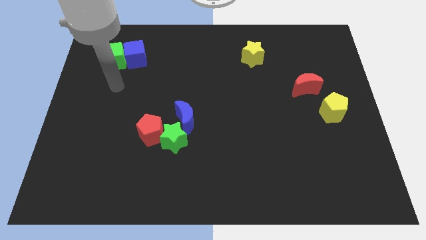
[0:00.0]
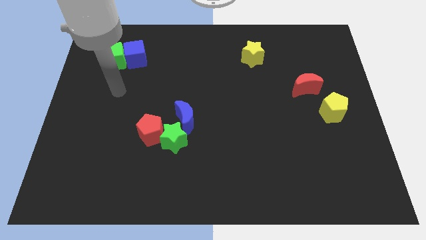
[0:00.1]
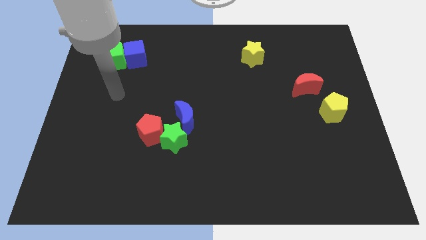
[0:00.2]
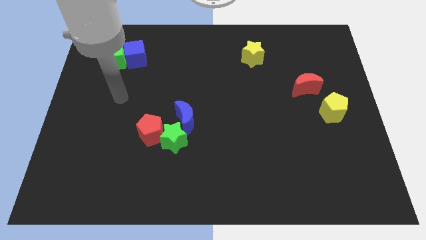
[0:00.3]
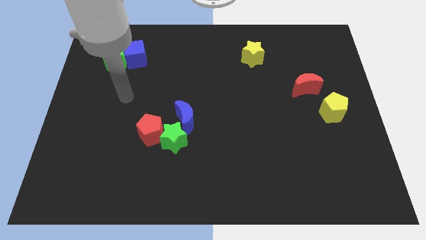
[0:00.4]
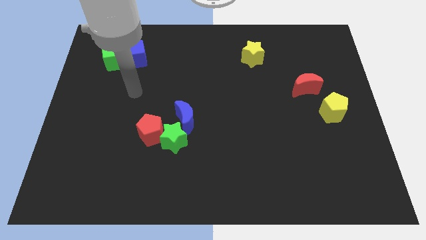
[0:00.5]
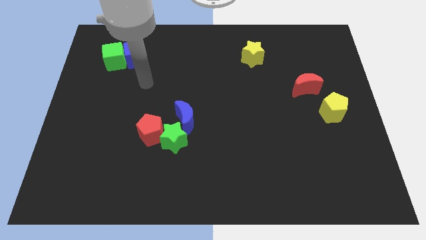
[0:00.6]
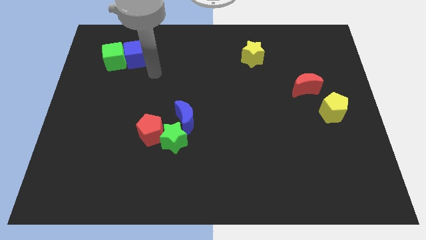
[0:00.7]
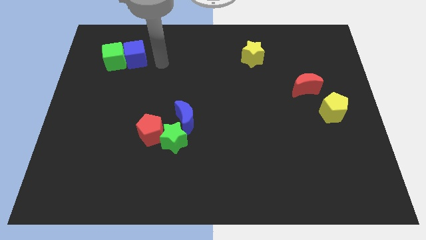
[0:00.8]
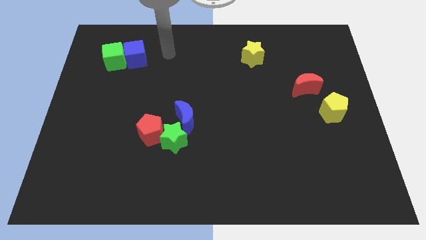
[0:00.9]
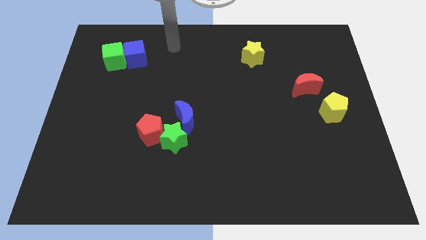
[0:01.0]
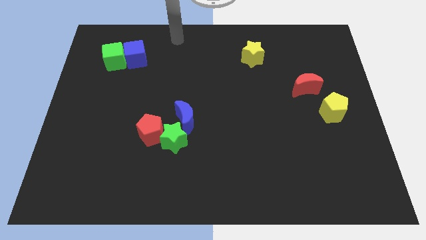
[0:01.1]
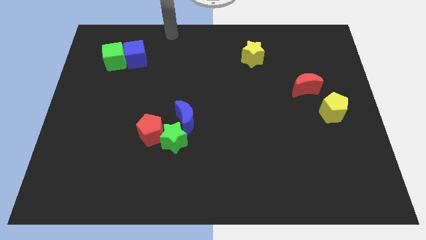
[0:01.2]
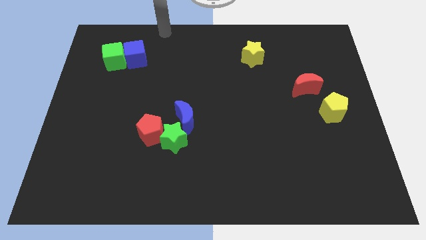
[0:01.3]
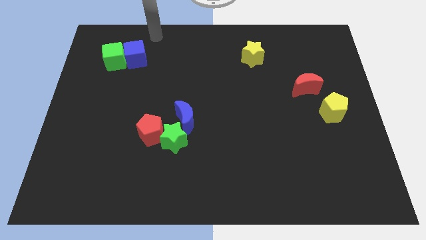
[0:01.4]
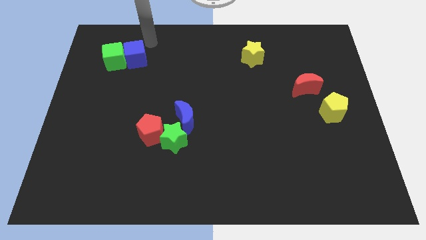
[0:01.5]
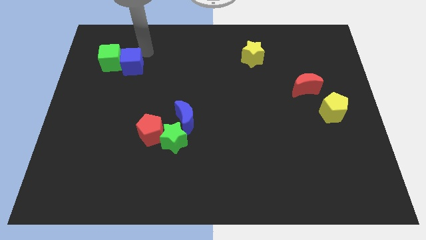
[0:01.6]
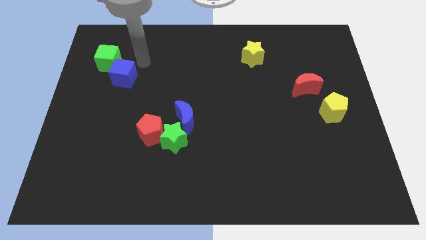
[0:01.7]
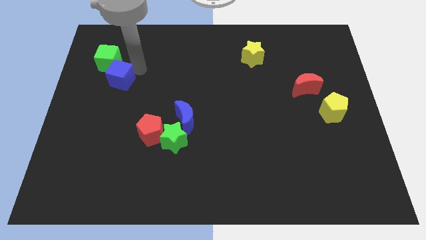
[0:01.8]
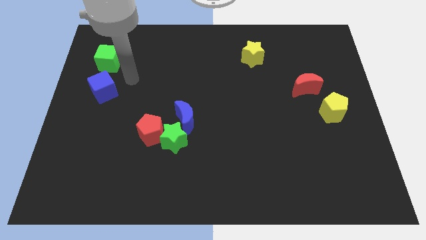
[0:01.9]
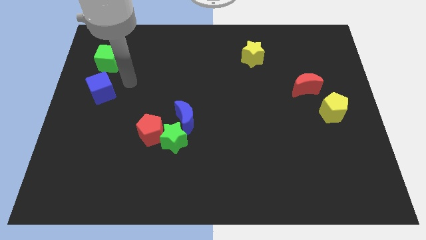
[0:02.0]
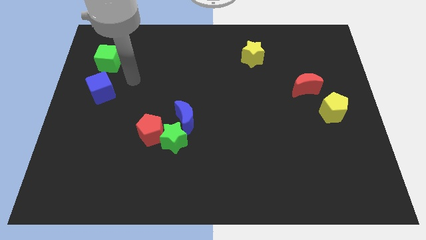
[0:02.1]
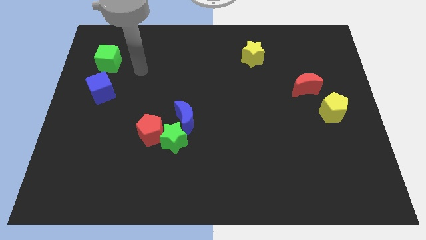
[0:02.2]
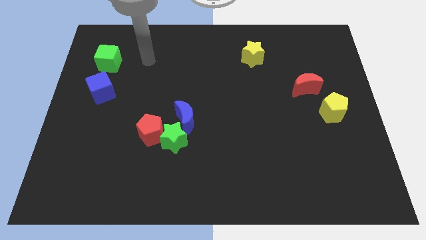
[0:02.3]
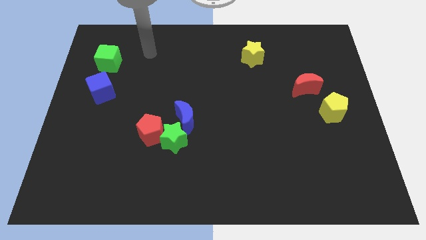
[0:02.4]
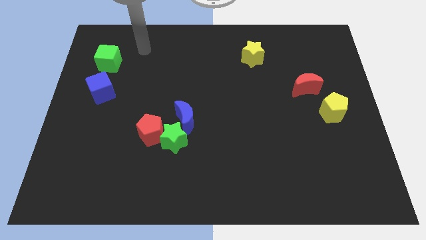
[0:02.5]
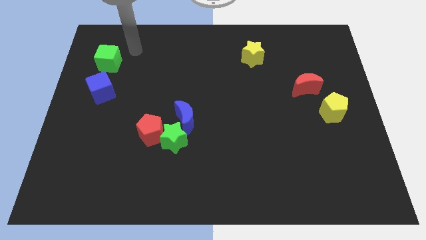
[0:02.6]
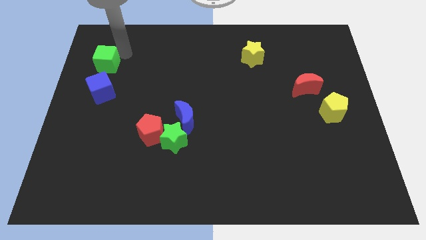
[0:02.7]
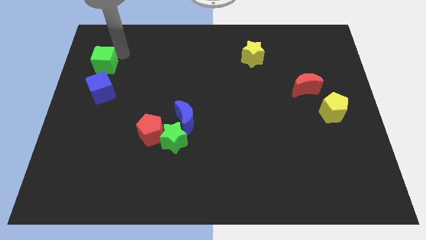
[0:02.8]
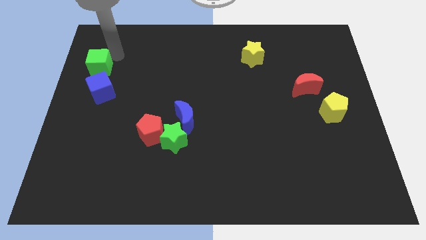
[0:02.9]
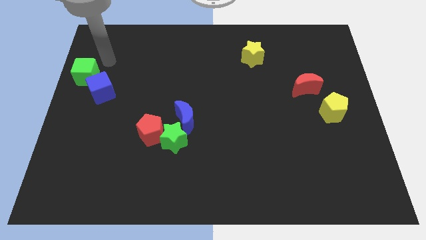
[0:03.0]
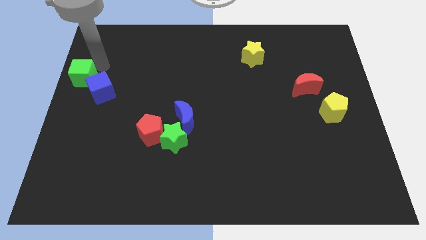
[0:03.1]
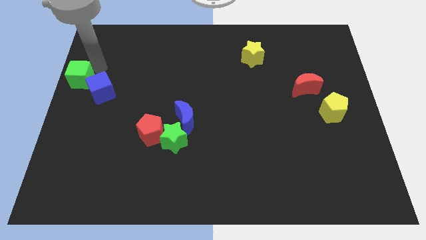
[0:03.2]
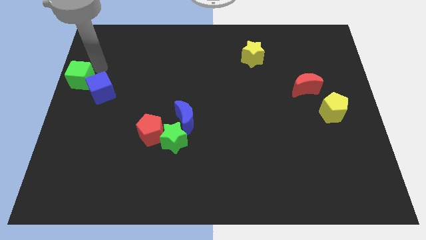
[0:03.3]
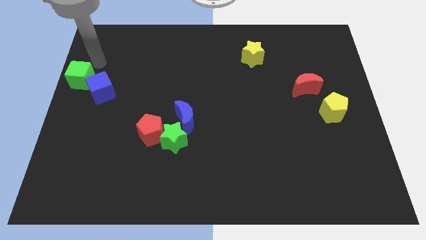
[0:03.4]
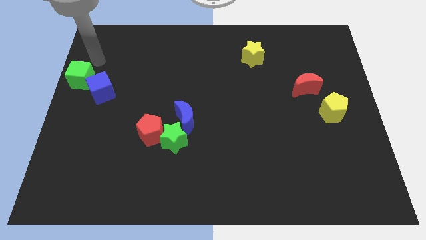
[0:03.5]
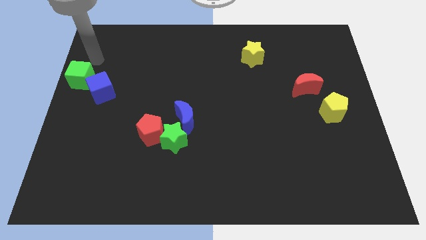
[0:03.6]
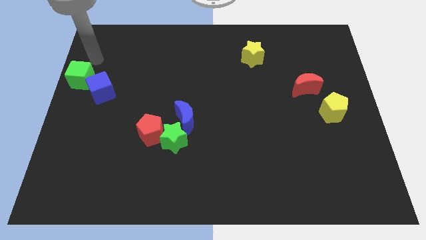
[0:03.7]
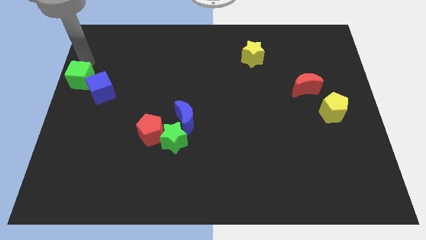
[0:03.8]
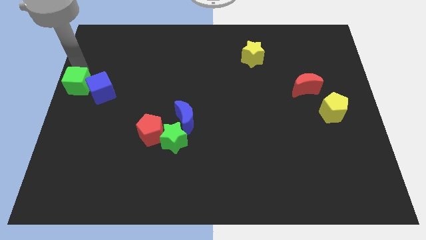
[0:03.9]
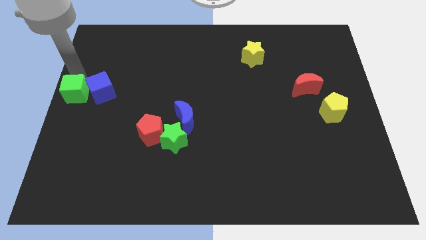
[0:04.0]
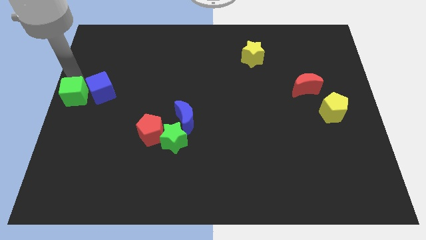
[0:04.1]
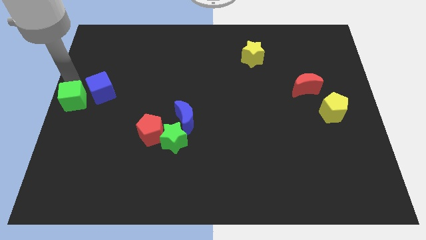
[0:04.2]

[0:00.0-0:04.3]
push the green and blue cubes to the left center of the board

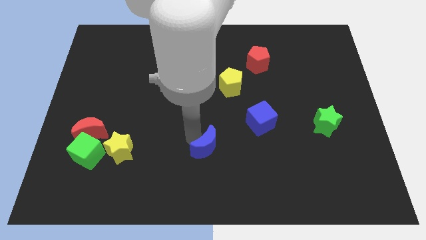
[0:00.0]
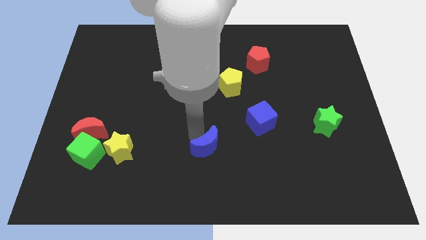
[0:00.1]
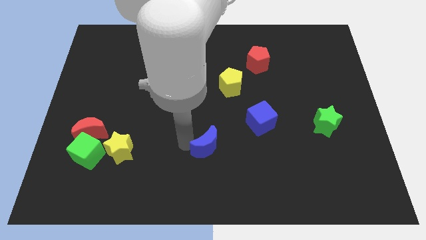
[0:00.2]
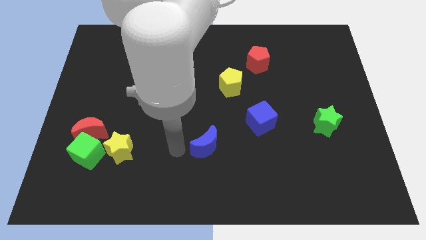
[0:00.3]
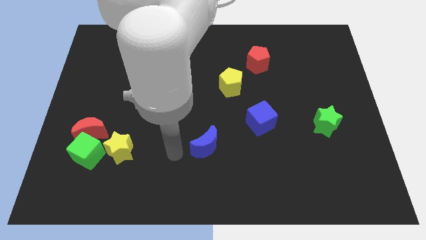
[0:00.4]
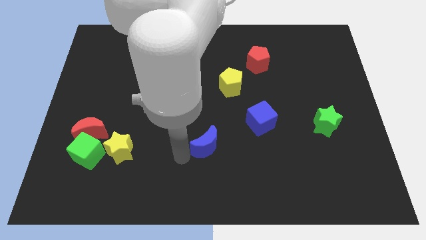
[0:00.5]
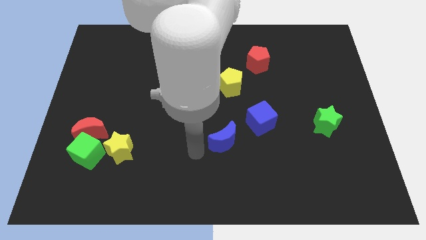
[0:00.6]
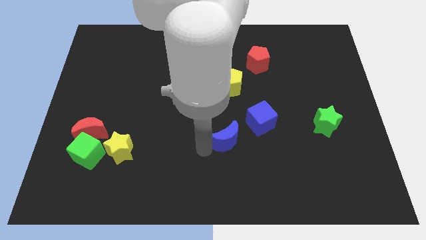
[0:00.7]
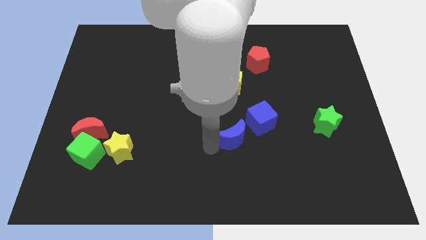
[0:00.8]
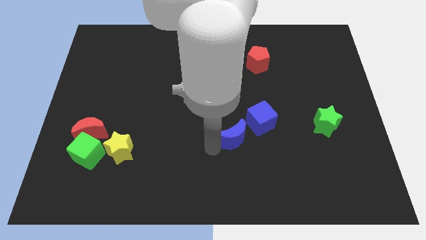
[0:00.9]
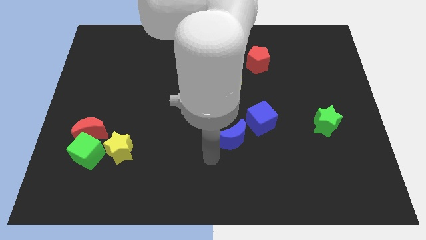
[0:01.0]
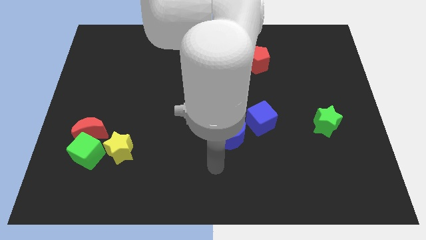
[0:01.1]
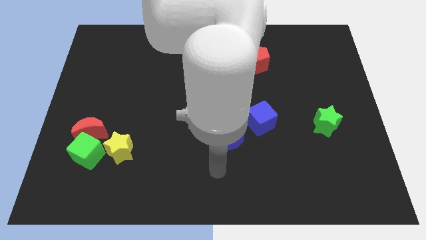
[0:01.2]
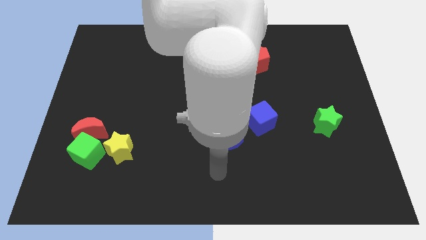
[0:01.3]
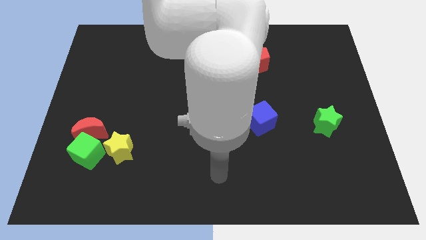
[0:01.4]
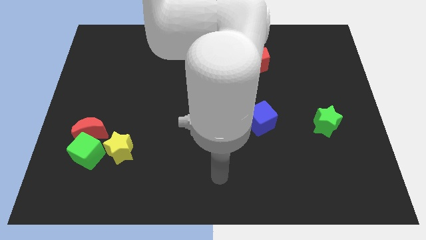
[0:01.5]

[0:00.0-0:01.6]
move the blue crescent to the left of the blue cube

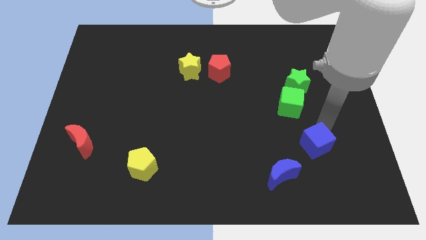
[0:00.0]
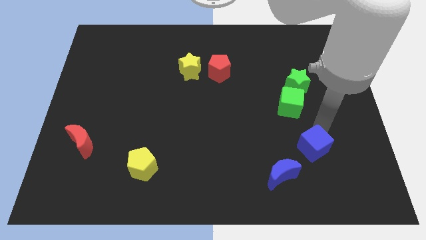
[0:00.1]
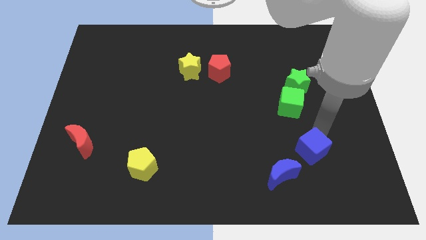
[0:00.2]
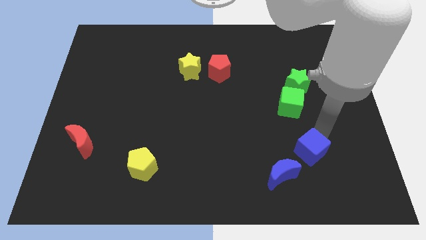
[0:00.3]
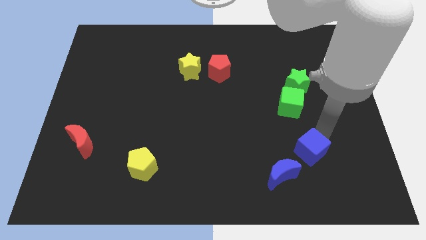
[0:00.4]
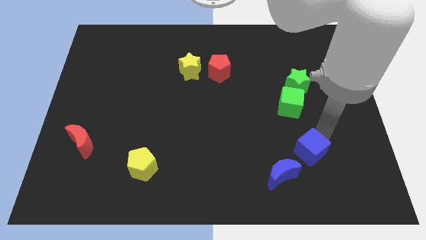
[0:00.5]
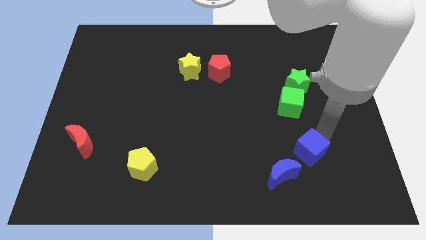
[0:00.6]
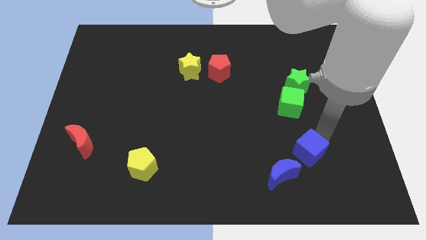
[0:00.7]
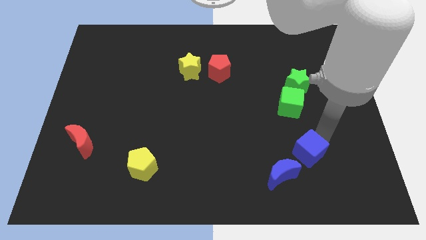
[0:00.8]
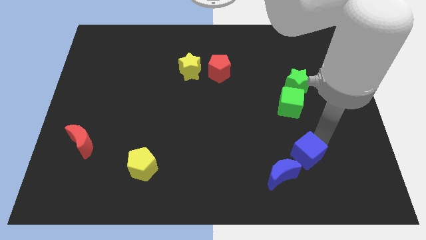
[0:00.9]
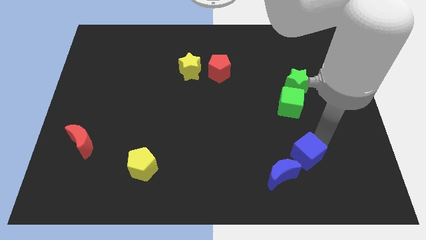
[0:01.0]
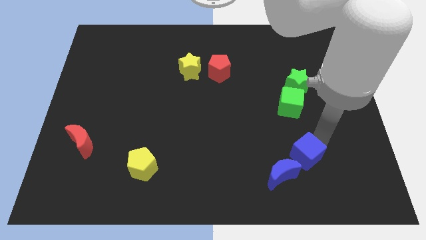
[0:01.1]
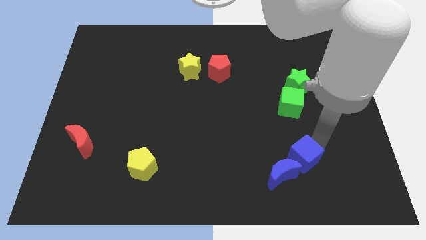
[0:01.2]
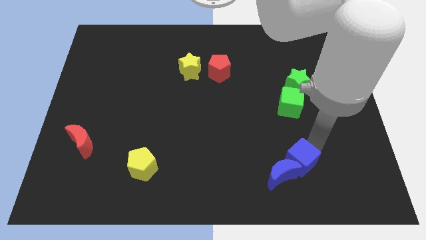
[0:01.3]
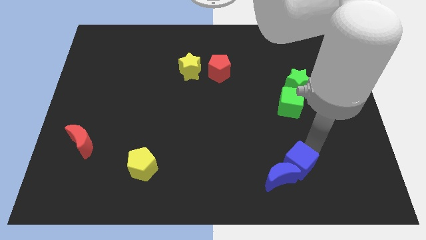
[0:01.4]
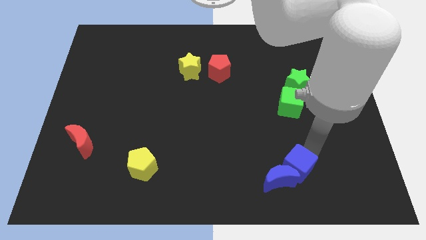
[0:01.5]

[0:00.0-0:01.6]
drag the blue cube into the top right side of the blue crescent

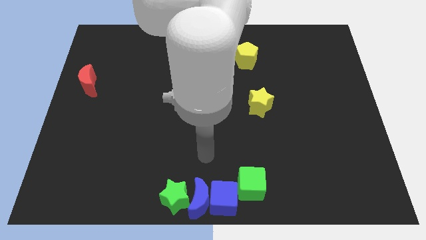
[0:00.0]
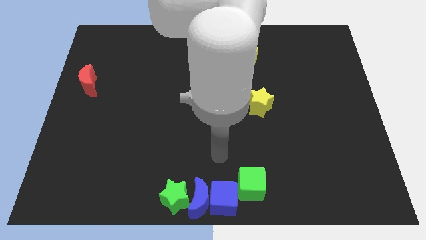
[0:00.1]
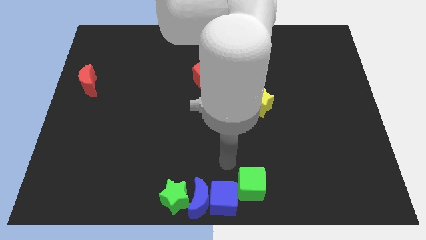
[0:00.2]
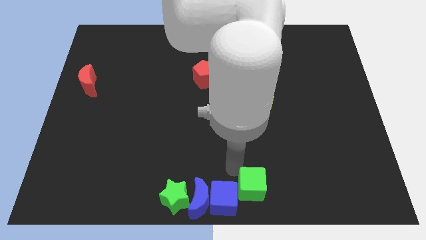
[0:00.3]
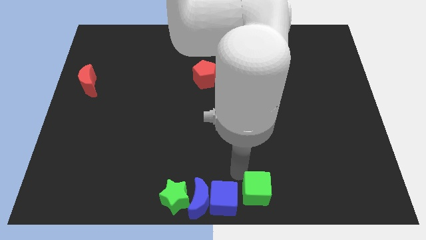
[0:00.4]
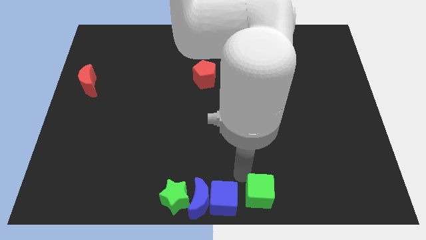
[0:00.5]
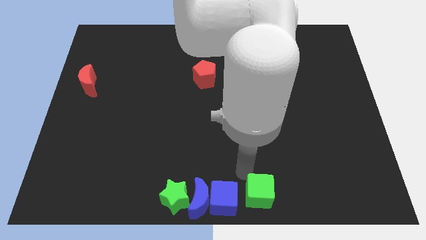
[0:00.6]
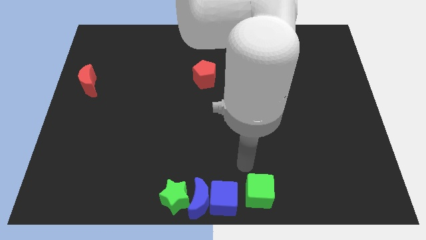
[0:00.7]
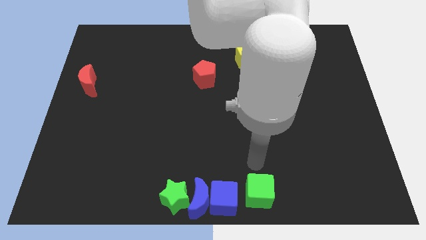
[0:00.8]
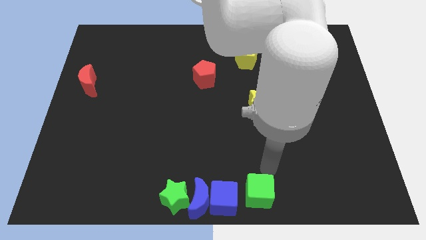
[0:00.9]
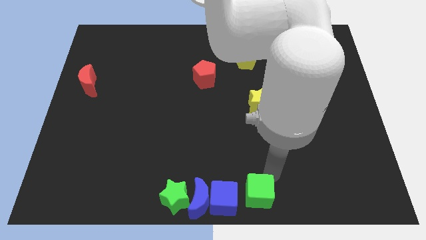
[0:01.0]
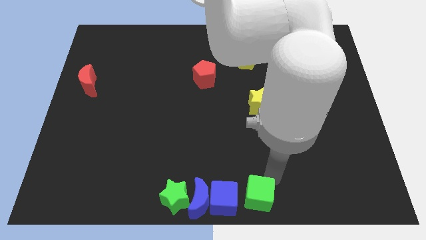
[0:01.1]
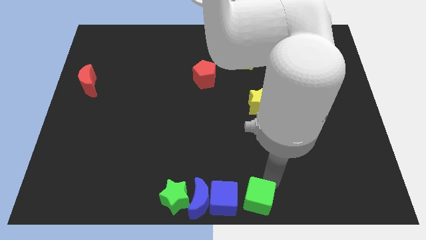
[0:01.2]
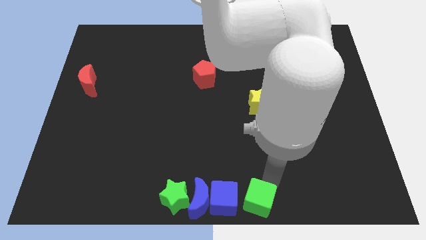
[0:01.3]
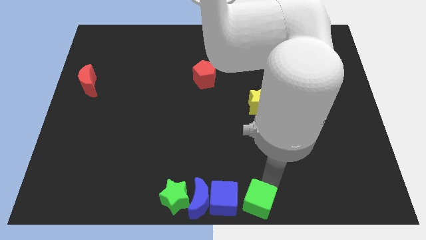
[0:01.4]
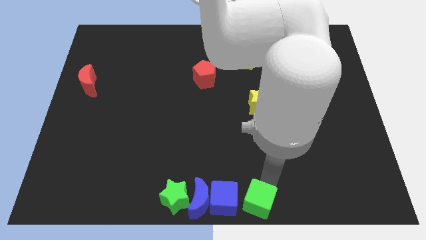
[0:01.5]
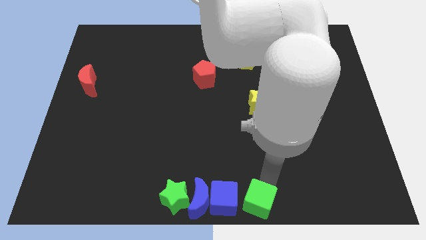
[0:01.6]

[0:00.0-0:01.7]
move the green cube to the right of the blue cube
